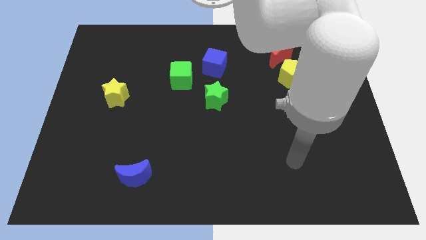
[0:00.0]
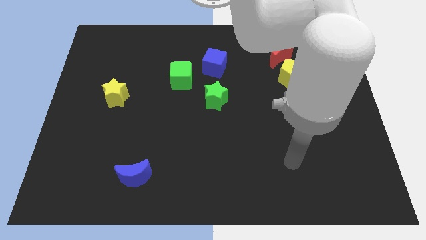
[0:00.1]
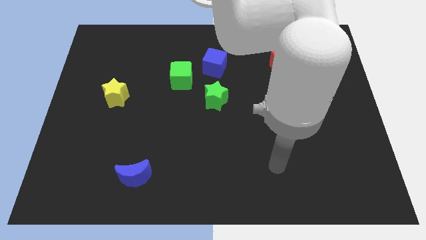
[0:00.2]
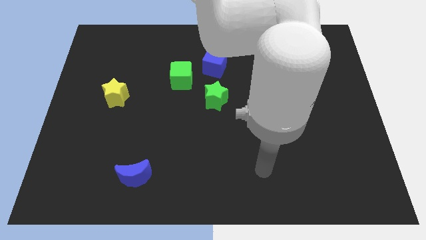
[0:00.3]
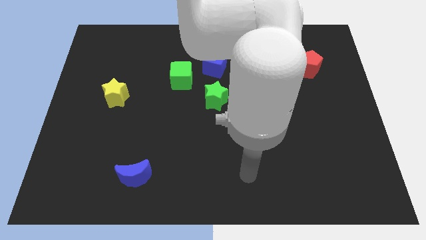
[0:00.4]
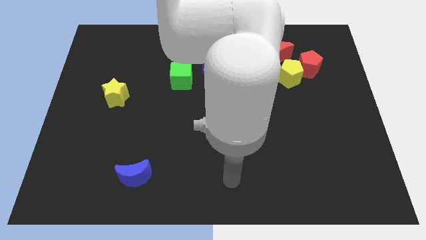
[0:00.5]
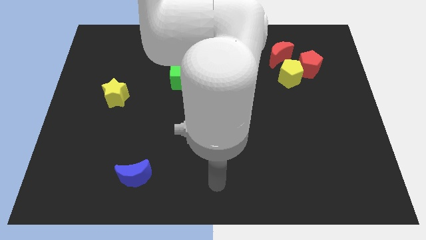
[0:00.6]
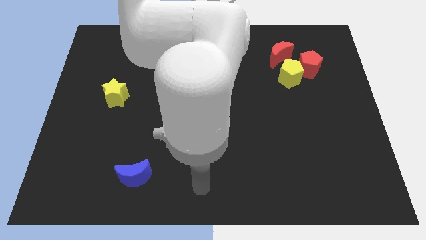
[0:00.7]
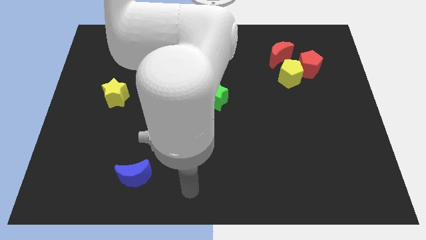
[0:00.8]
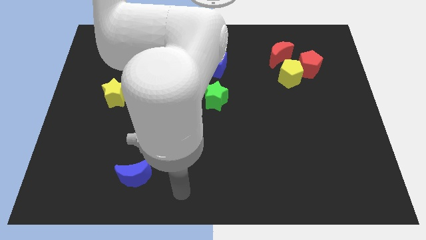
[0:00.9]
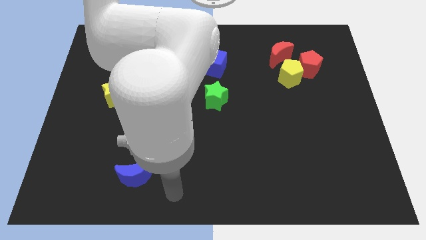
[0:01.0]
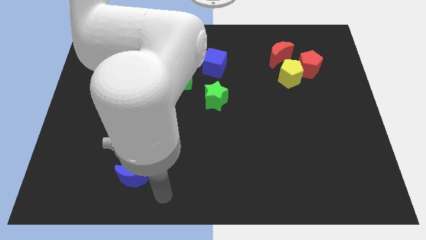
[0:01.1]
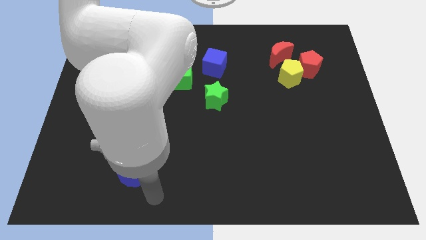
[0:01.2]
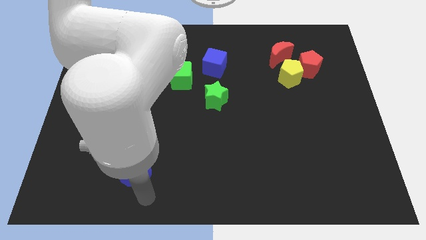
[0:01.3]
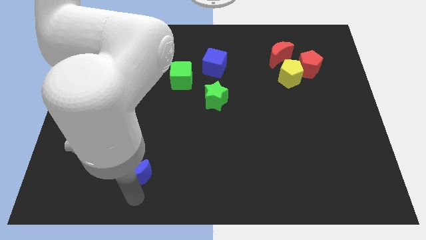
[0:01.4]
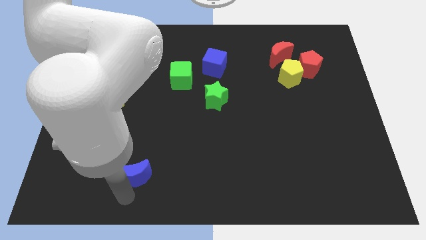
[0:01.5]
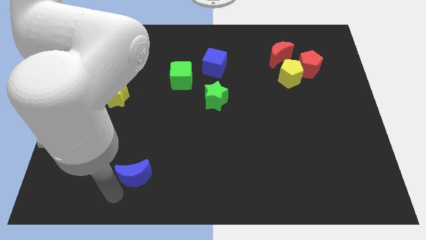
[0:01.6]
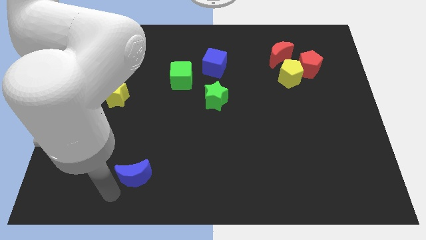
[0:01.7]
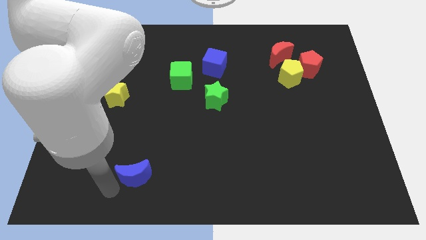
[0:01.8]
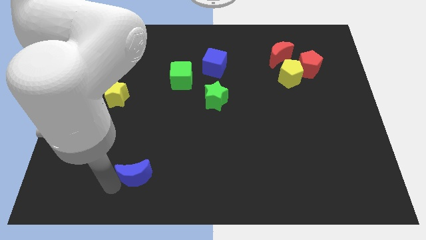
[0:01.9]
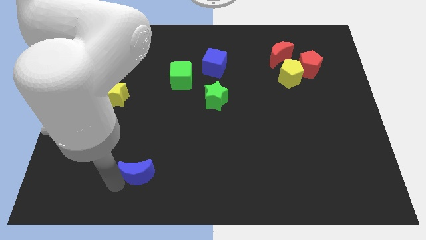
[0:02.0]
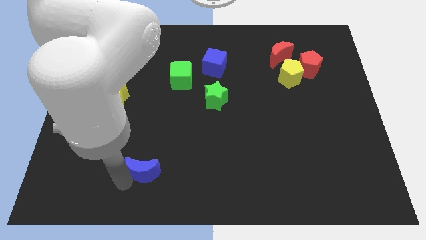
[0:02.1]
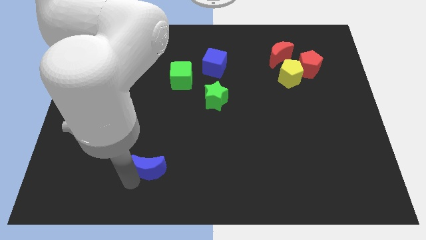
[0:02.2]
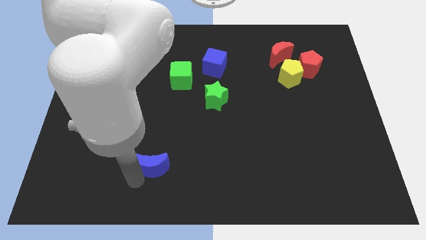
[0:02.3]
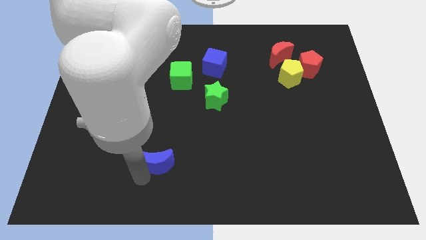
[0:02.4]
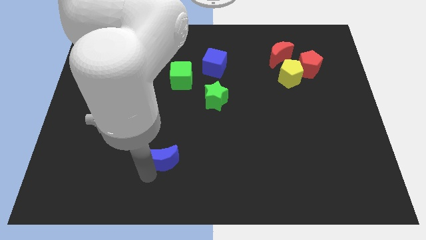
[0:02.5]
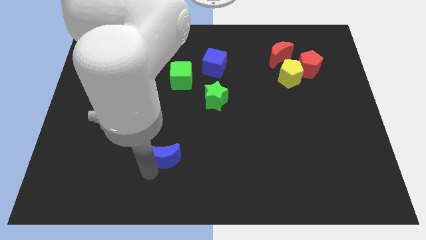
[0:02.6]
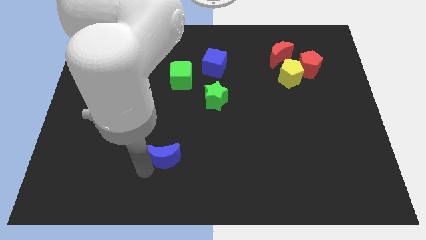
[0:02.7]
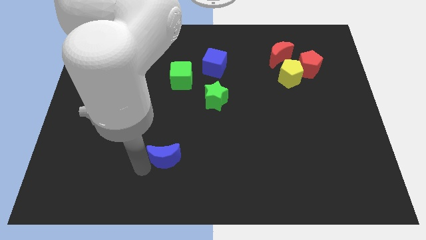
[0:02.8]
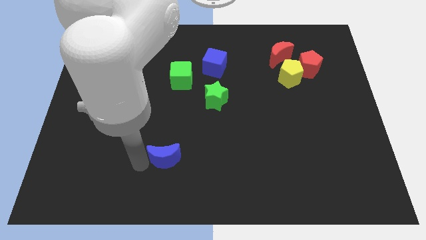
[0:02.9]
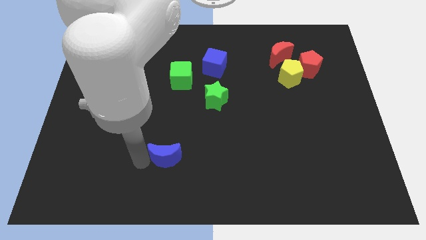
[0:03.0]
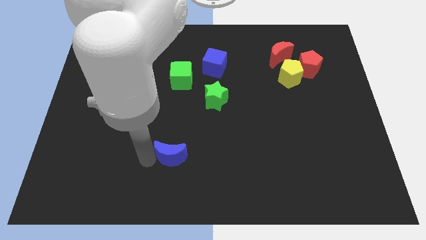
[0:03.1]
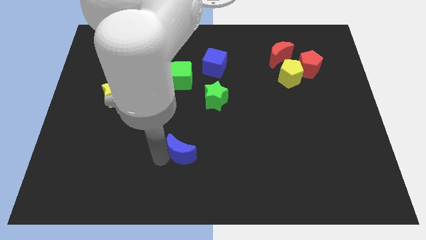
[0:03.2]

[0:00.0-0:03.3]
place the blue moon vertically at the bottom side of the green cube

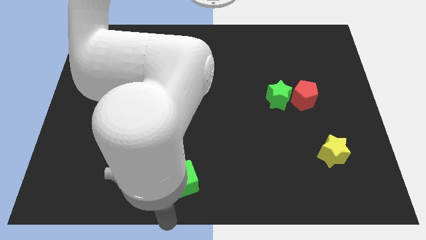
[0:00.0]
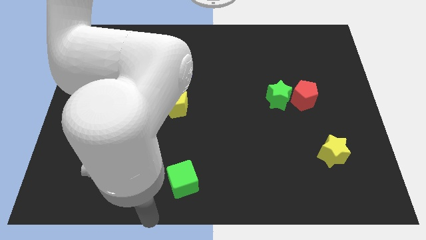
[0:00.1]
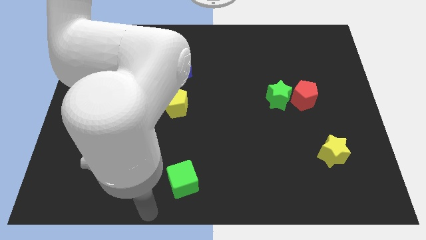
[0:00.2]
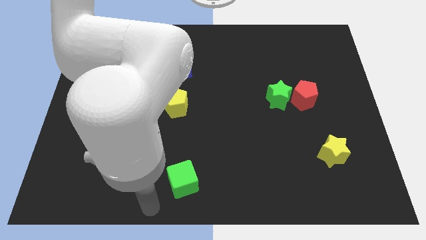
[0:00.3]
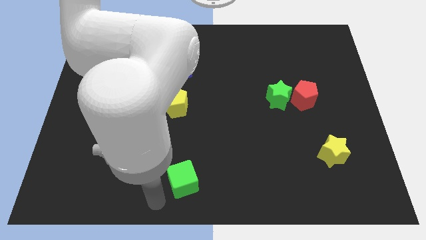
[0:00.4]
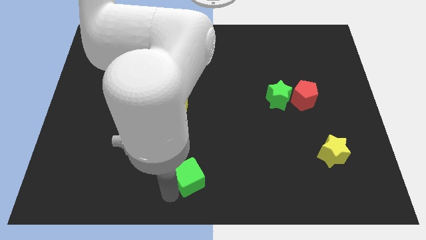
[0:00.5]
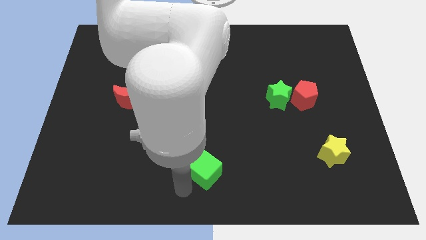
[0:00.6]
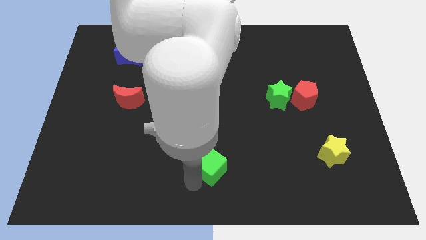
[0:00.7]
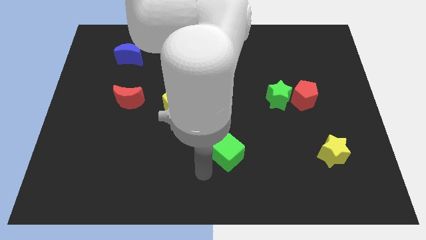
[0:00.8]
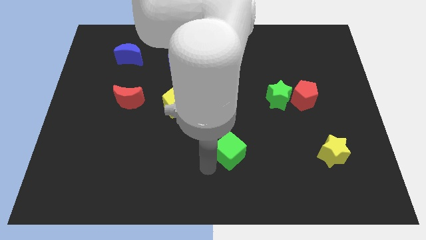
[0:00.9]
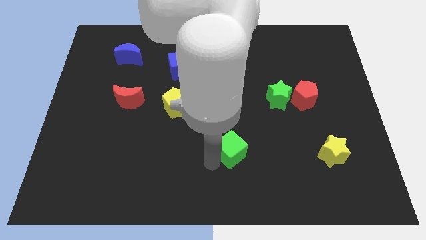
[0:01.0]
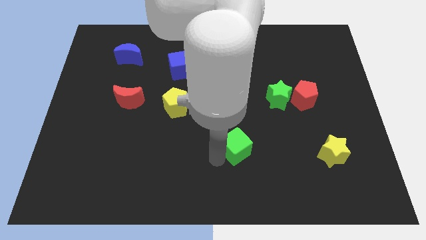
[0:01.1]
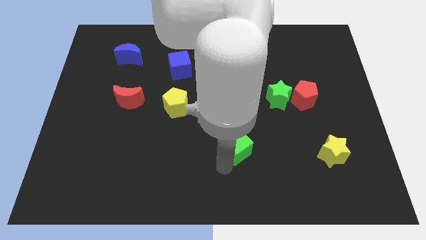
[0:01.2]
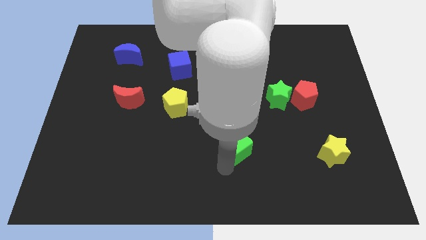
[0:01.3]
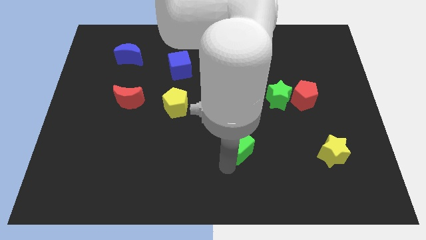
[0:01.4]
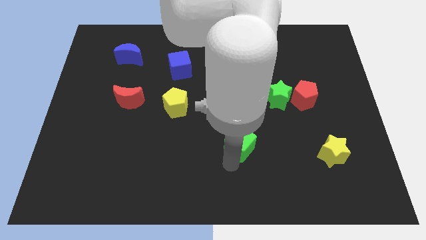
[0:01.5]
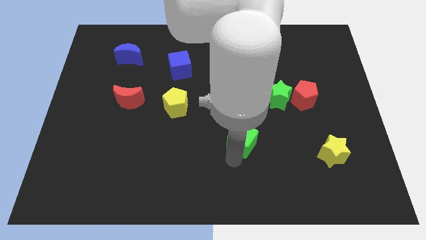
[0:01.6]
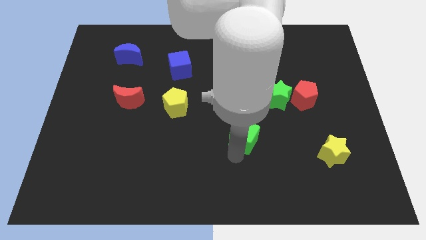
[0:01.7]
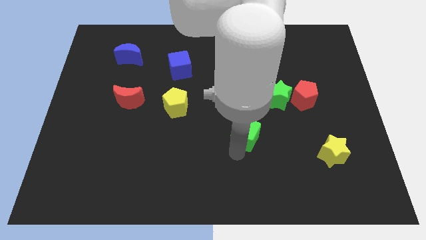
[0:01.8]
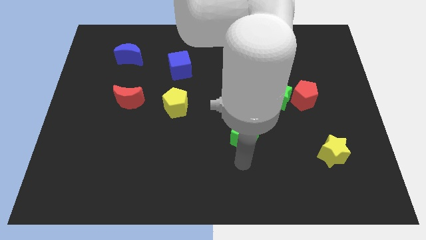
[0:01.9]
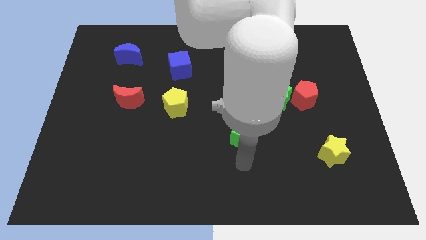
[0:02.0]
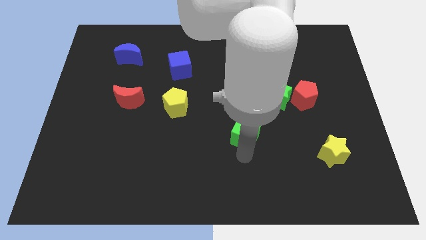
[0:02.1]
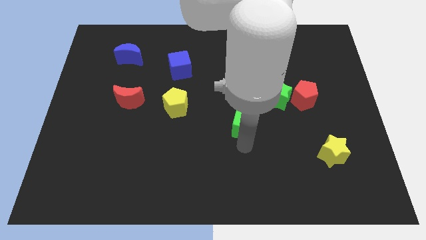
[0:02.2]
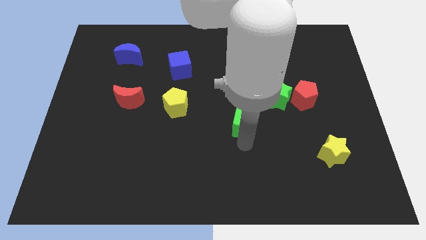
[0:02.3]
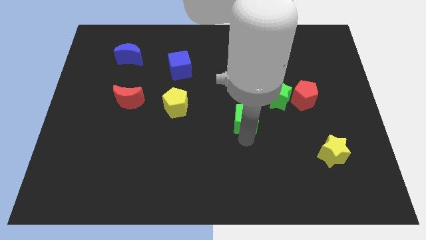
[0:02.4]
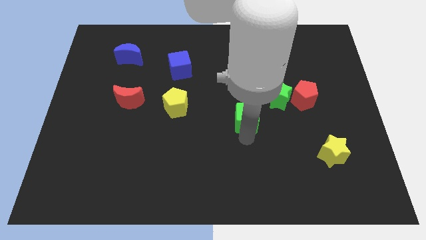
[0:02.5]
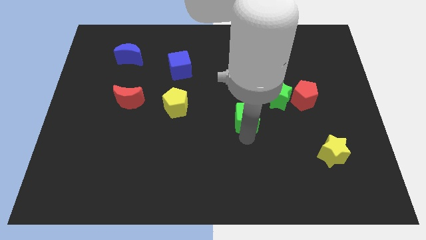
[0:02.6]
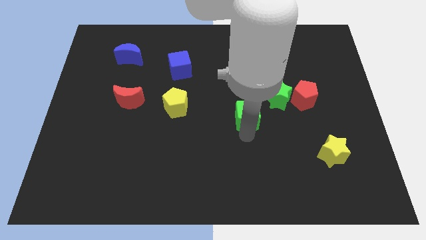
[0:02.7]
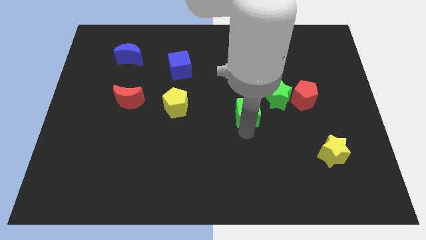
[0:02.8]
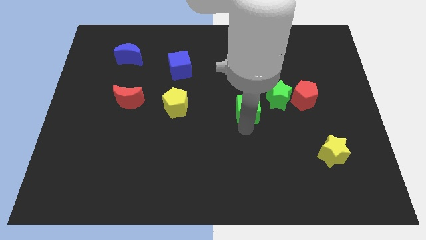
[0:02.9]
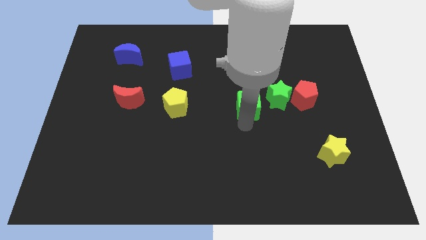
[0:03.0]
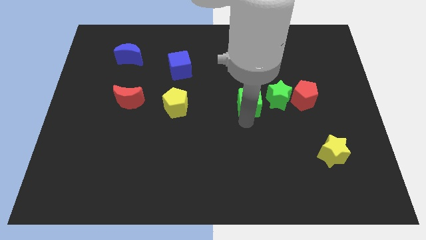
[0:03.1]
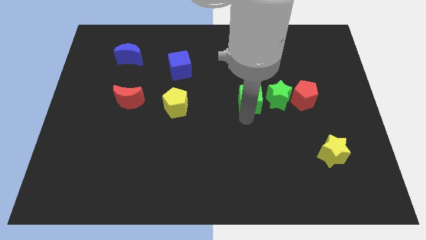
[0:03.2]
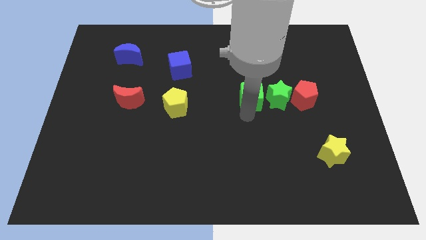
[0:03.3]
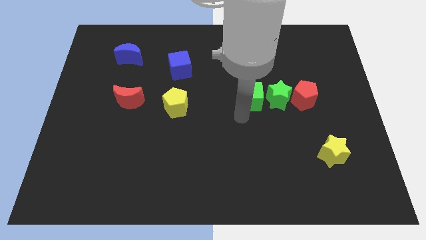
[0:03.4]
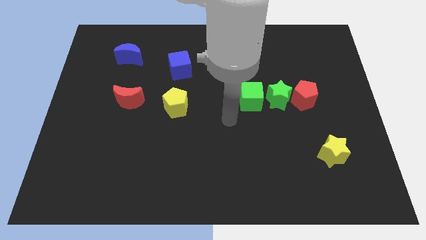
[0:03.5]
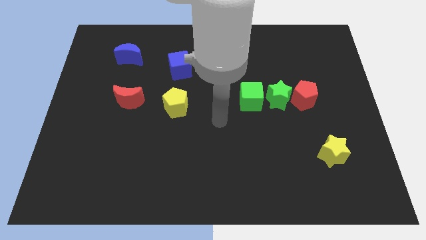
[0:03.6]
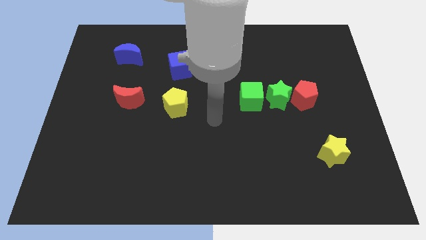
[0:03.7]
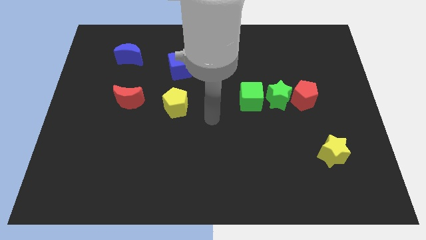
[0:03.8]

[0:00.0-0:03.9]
move green cube left beside green star

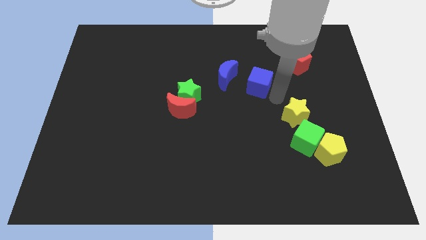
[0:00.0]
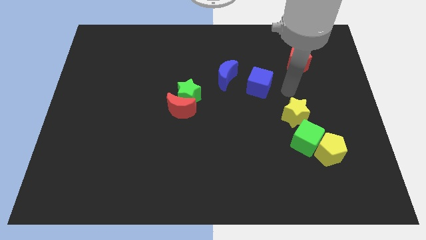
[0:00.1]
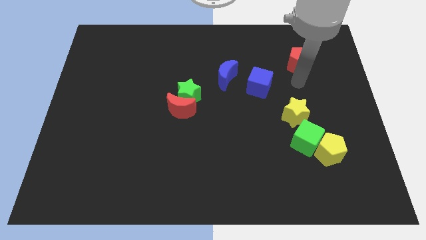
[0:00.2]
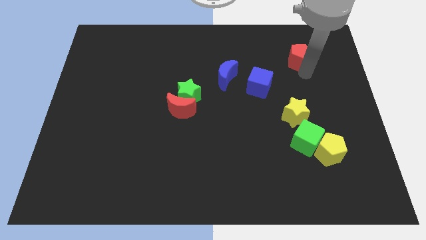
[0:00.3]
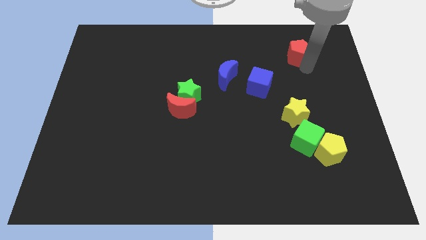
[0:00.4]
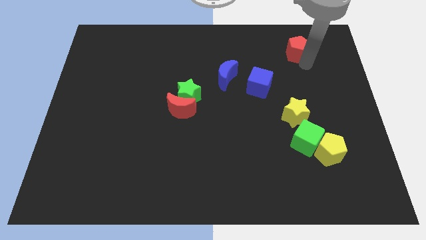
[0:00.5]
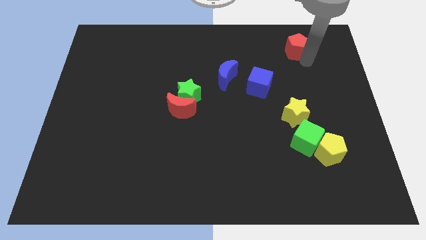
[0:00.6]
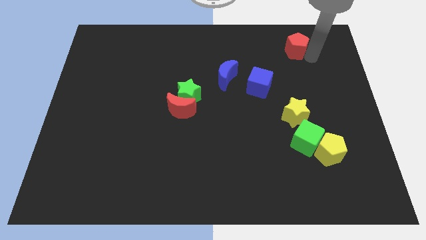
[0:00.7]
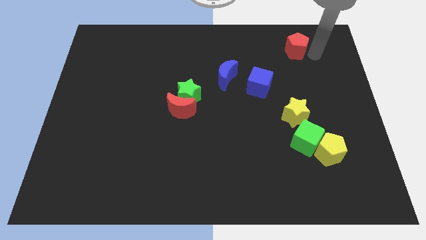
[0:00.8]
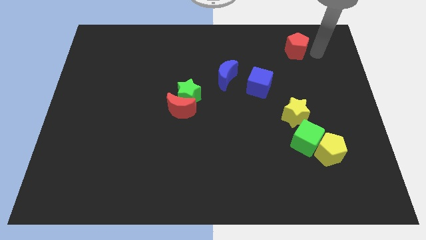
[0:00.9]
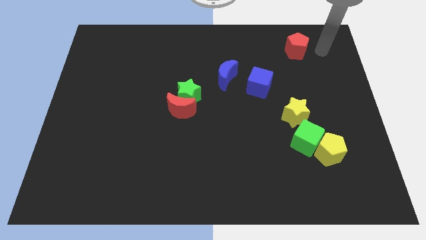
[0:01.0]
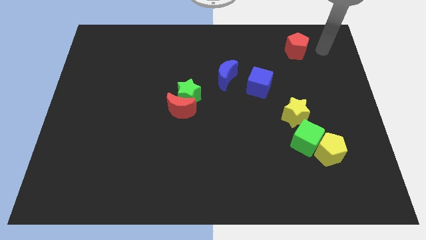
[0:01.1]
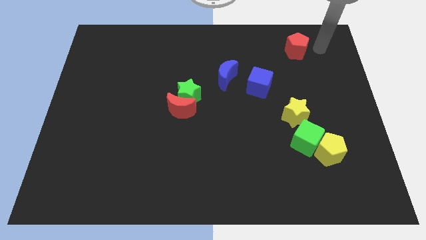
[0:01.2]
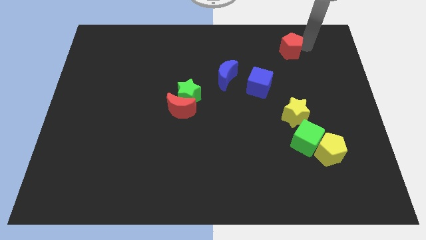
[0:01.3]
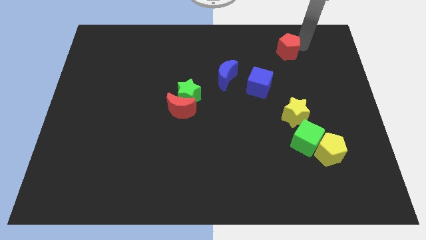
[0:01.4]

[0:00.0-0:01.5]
slide the red pentagon to the left slightly

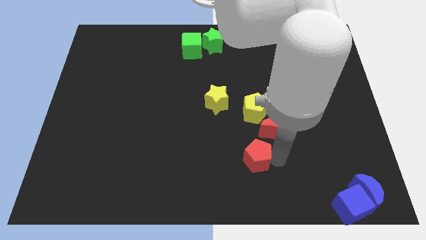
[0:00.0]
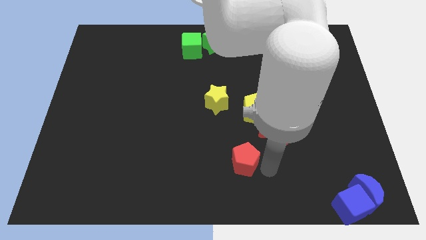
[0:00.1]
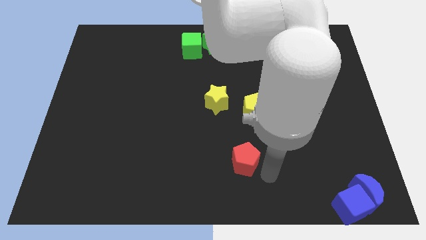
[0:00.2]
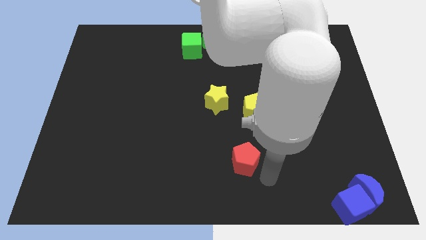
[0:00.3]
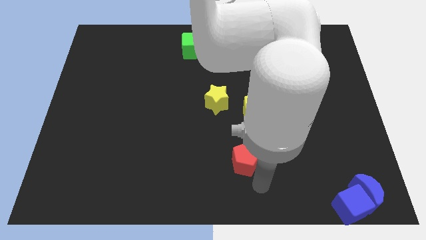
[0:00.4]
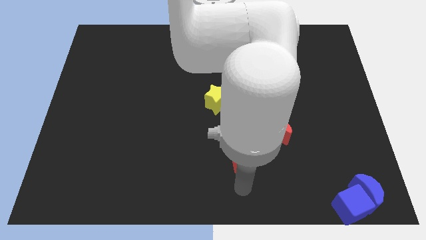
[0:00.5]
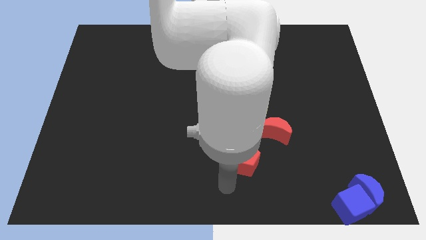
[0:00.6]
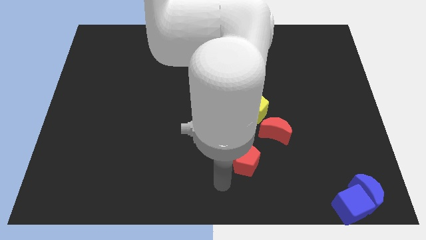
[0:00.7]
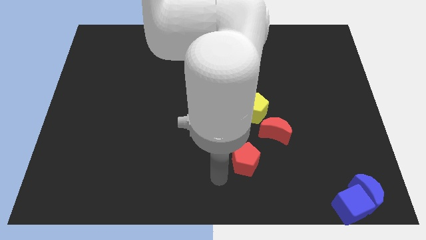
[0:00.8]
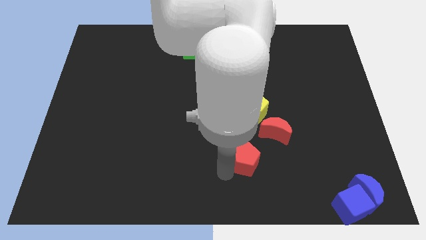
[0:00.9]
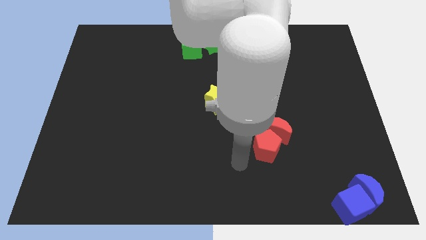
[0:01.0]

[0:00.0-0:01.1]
slide red pentagon into red moon
